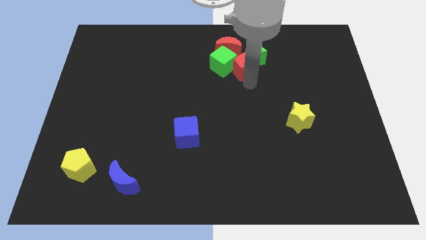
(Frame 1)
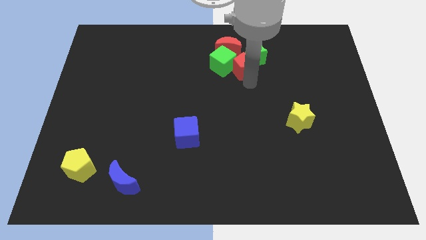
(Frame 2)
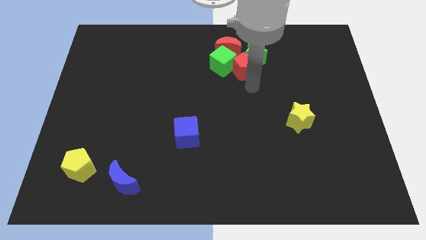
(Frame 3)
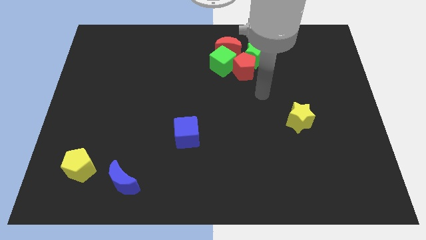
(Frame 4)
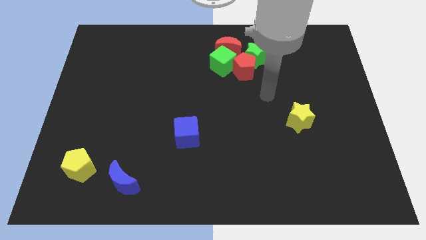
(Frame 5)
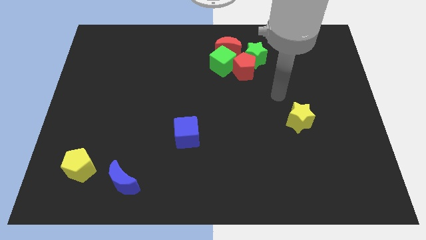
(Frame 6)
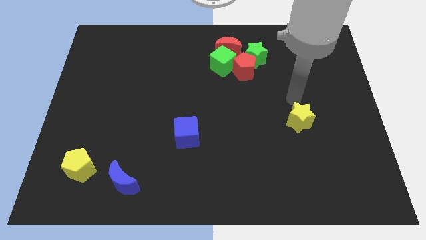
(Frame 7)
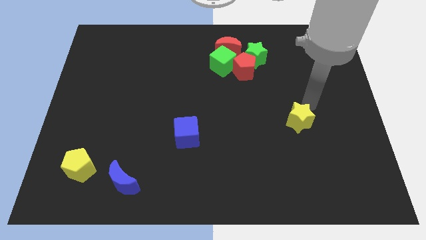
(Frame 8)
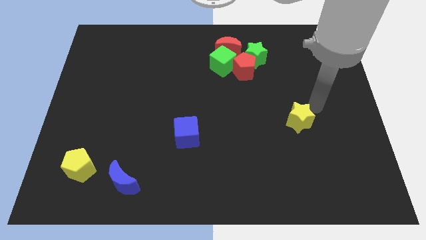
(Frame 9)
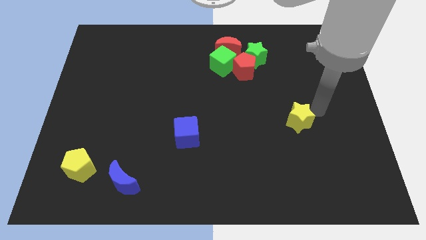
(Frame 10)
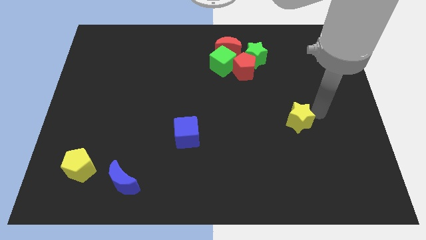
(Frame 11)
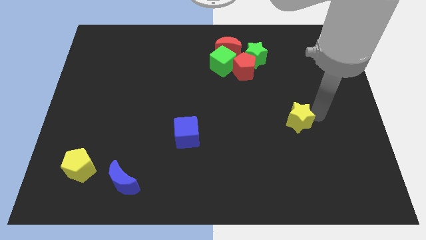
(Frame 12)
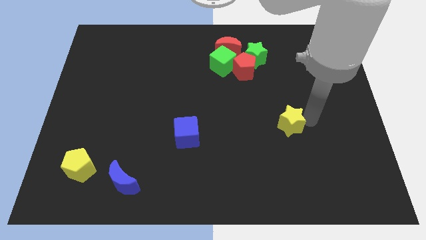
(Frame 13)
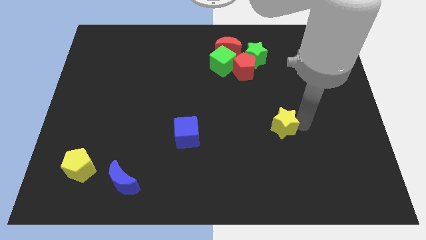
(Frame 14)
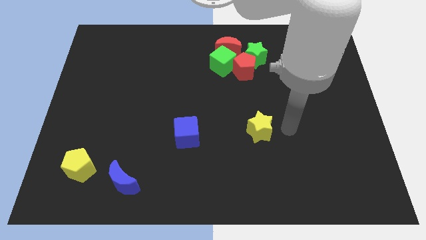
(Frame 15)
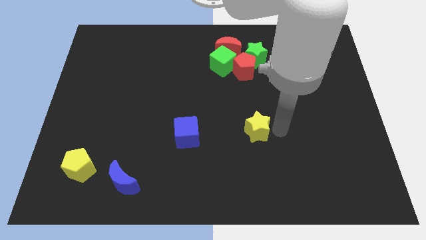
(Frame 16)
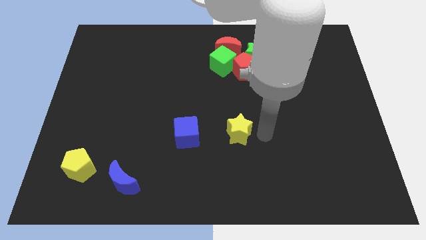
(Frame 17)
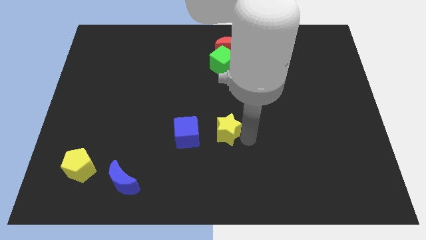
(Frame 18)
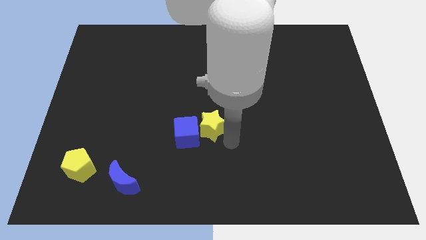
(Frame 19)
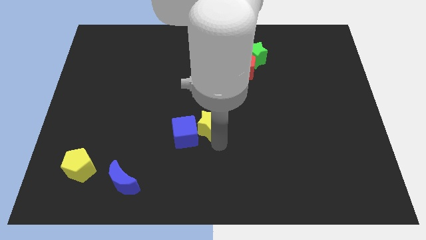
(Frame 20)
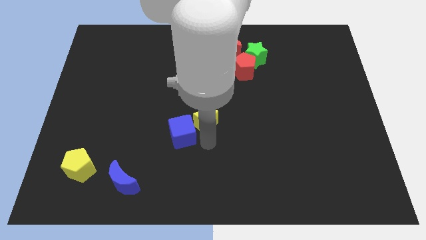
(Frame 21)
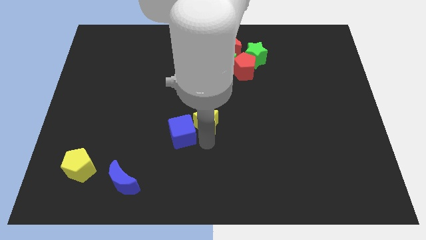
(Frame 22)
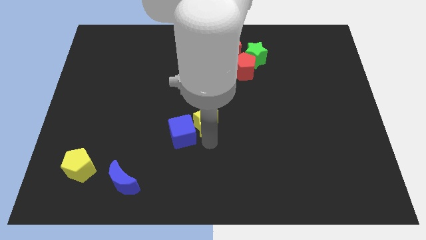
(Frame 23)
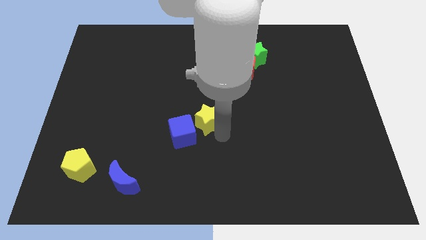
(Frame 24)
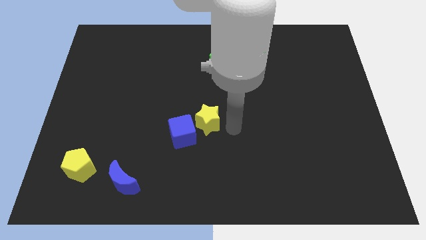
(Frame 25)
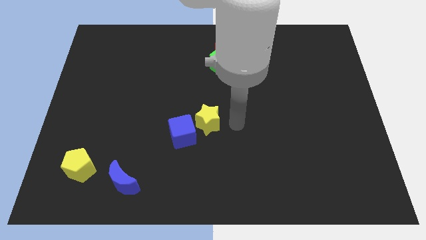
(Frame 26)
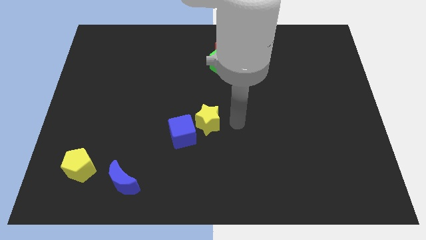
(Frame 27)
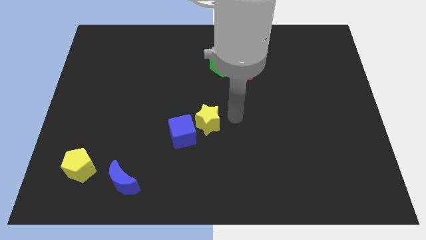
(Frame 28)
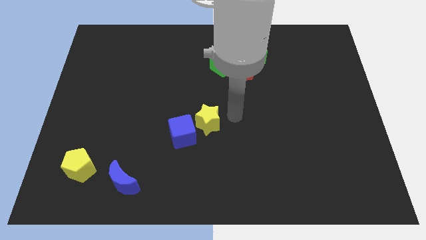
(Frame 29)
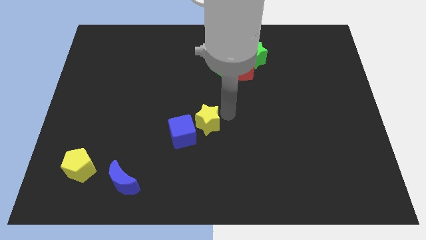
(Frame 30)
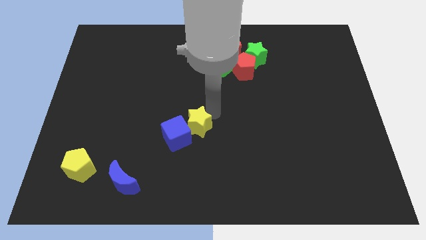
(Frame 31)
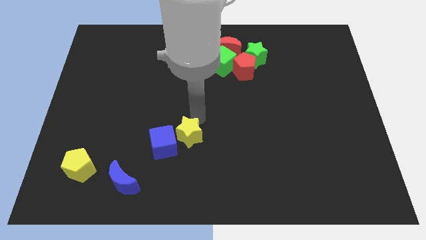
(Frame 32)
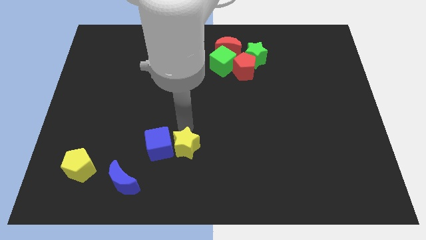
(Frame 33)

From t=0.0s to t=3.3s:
move the yellow star into blue cube

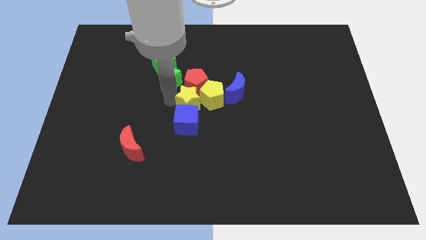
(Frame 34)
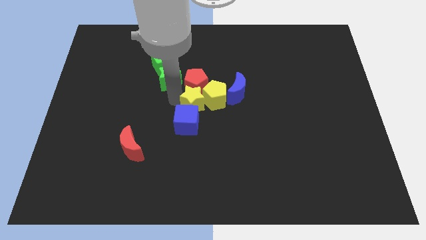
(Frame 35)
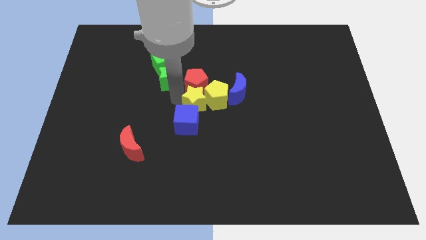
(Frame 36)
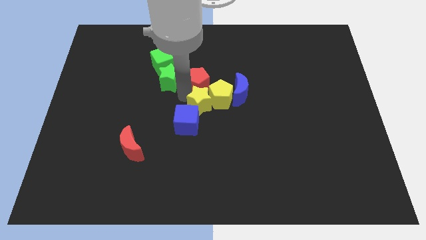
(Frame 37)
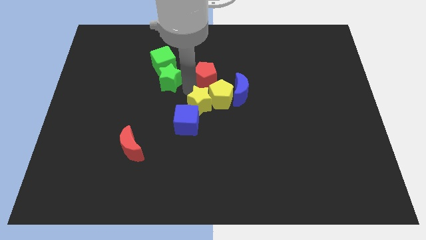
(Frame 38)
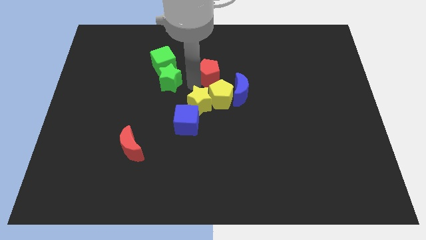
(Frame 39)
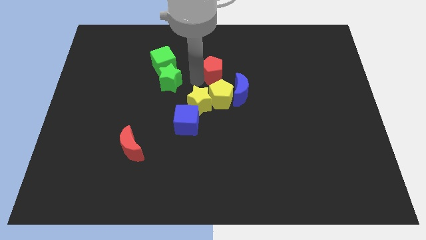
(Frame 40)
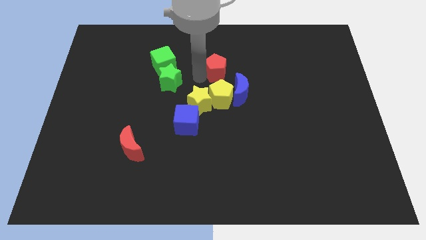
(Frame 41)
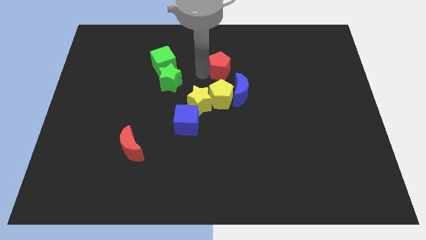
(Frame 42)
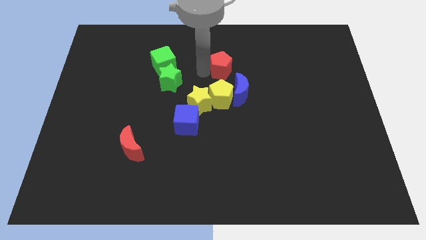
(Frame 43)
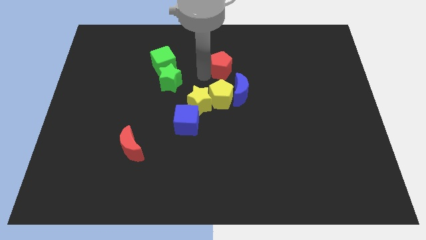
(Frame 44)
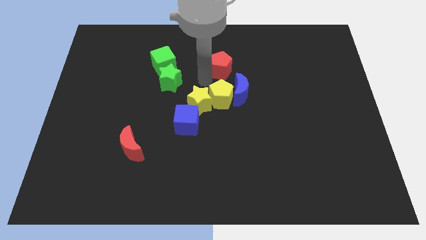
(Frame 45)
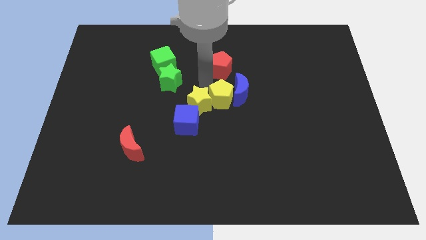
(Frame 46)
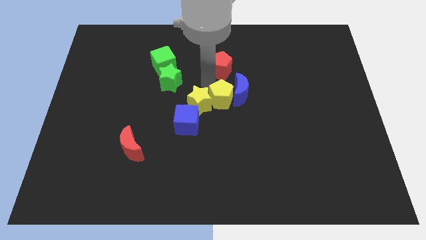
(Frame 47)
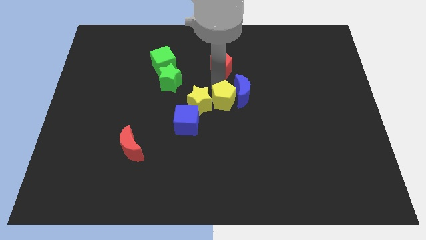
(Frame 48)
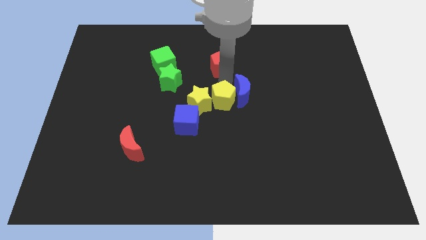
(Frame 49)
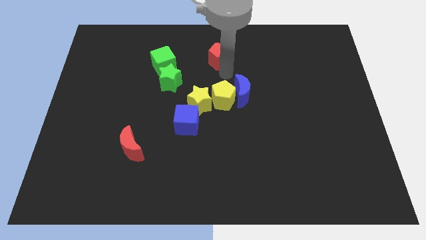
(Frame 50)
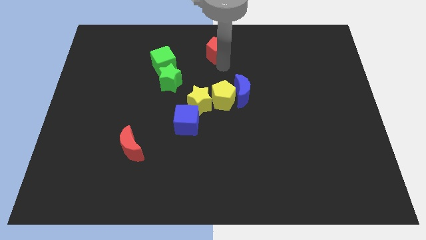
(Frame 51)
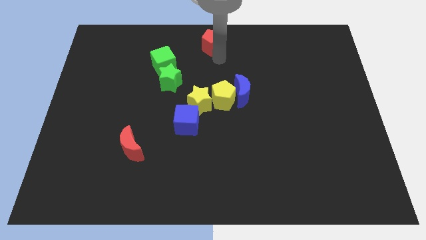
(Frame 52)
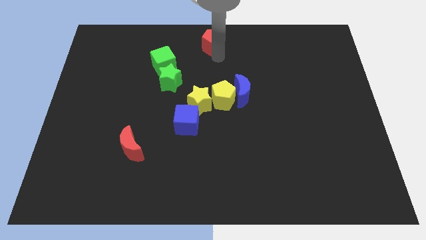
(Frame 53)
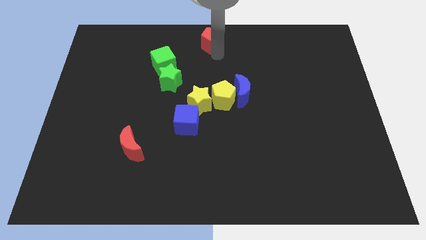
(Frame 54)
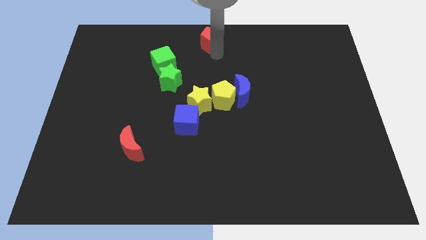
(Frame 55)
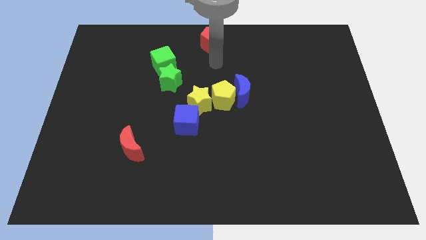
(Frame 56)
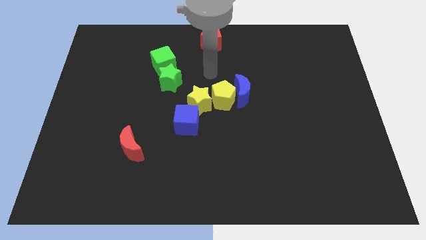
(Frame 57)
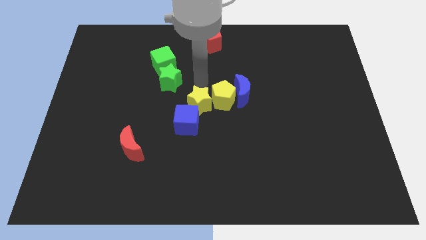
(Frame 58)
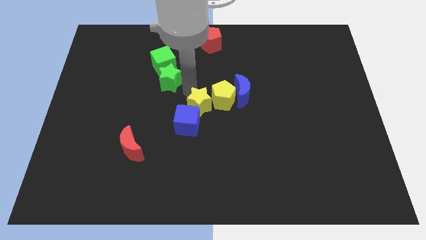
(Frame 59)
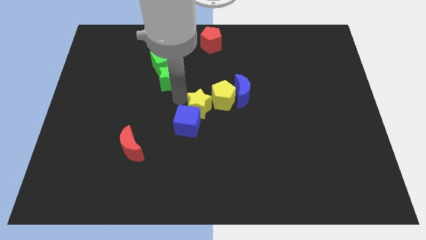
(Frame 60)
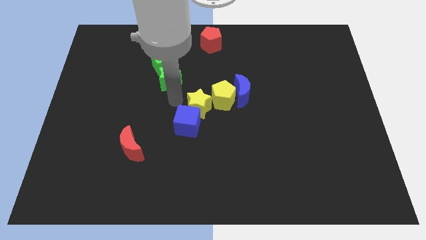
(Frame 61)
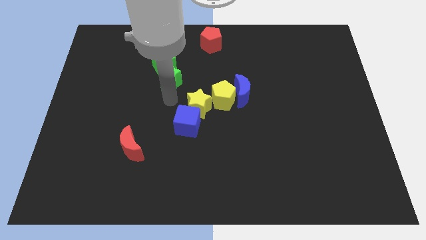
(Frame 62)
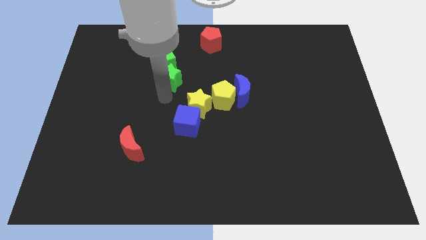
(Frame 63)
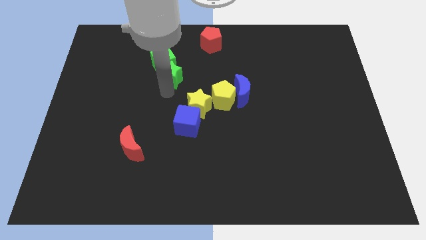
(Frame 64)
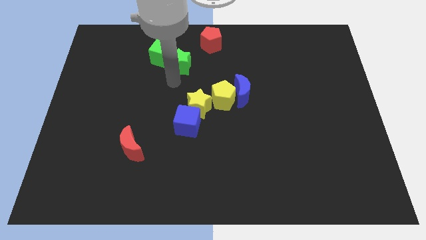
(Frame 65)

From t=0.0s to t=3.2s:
move red pentagon to the top center

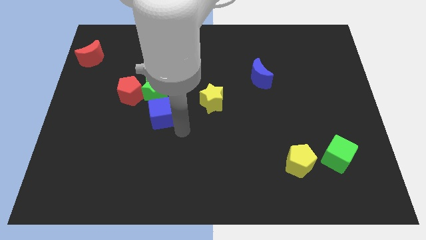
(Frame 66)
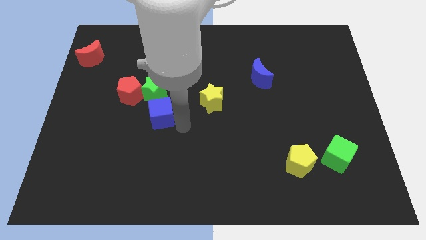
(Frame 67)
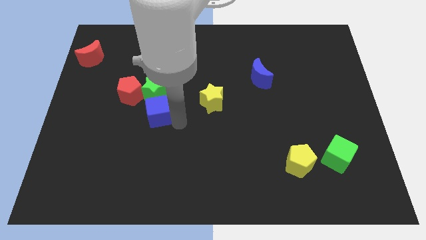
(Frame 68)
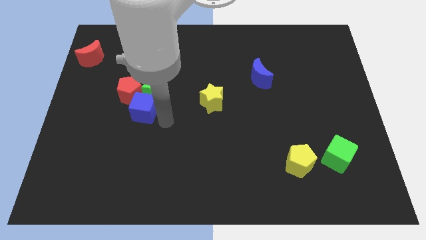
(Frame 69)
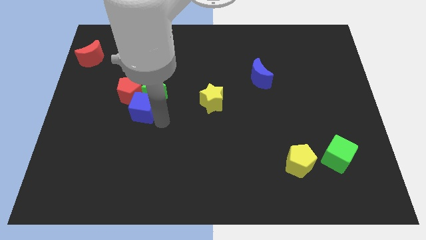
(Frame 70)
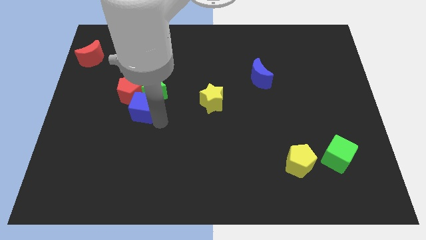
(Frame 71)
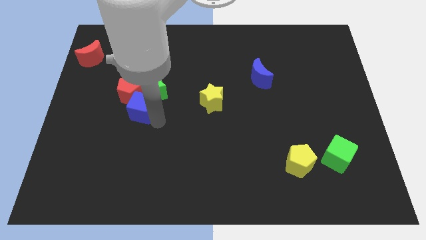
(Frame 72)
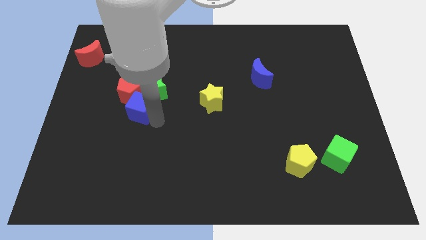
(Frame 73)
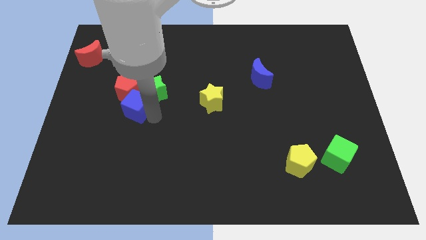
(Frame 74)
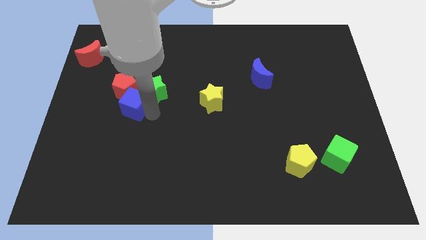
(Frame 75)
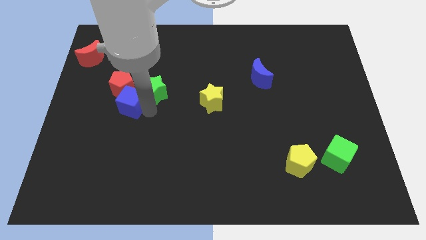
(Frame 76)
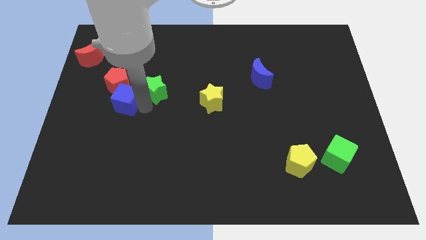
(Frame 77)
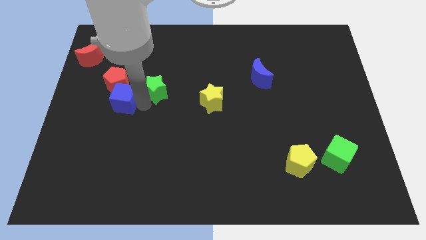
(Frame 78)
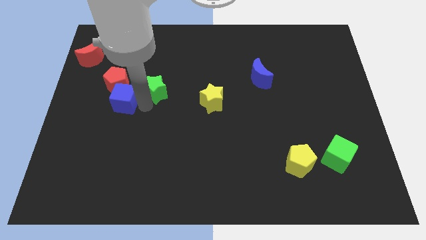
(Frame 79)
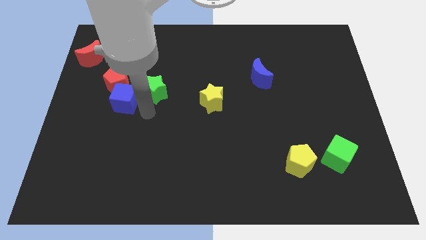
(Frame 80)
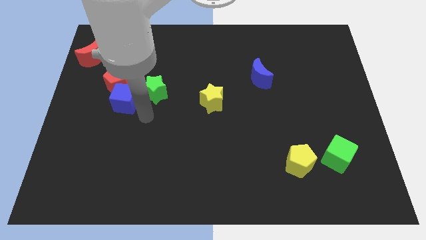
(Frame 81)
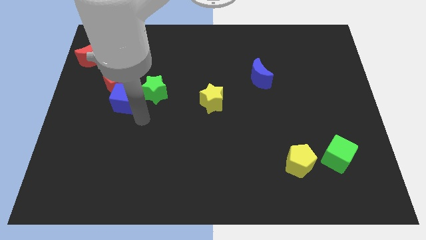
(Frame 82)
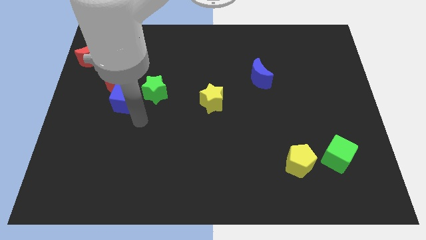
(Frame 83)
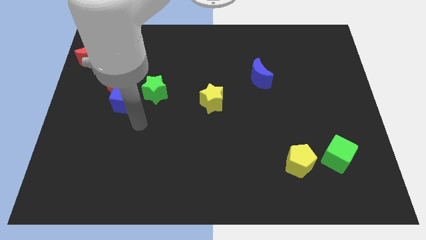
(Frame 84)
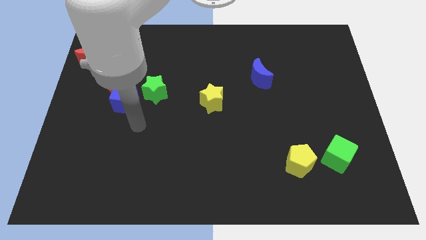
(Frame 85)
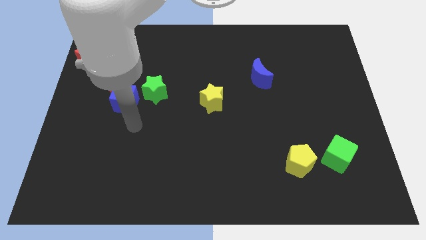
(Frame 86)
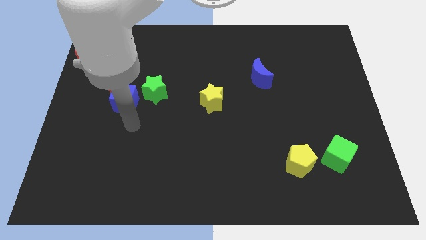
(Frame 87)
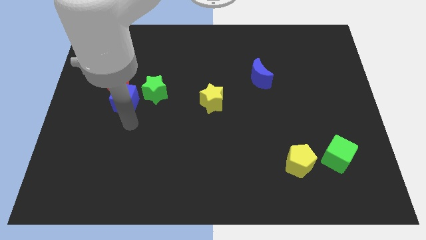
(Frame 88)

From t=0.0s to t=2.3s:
push blue cube into the red pentagon

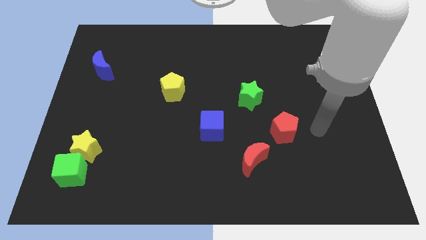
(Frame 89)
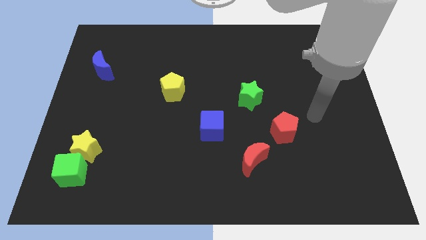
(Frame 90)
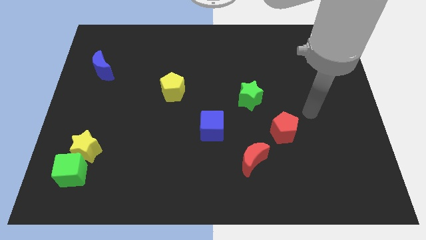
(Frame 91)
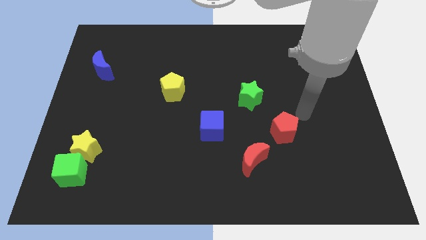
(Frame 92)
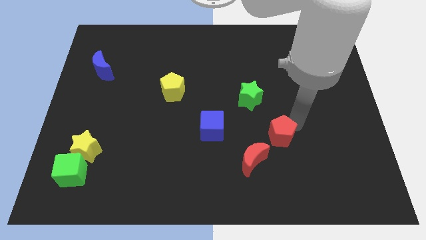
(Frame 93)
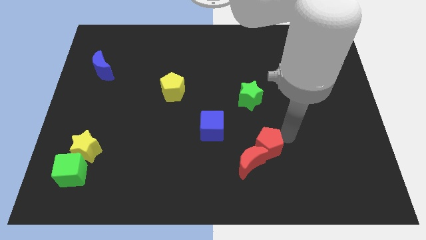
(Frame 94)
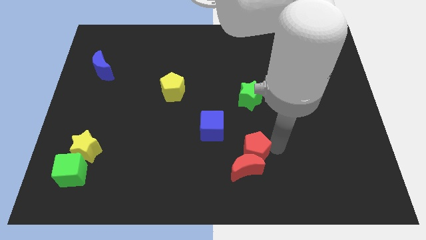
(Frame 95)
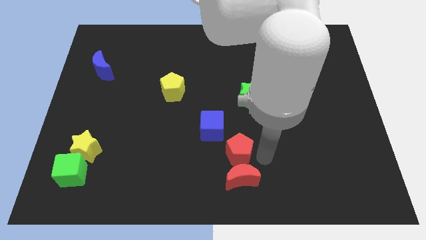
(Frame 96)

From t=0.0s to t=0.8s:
place red pentagon below green star
